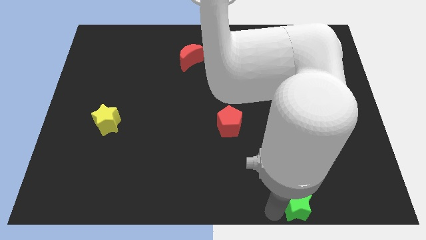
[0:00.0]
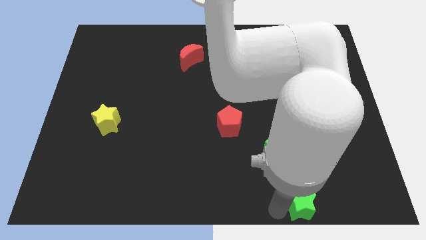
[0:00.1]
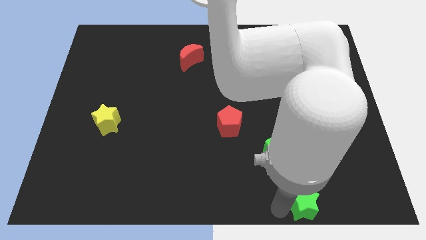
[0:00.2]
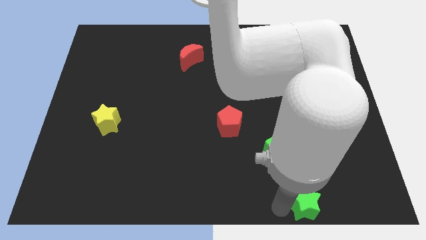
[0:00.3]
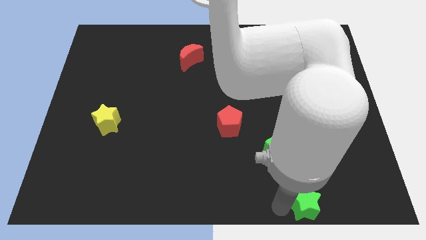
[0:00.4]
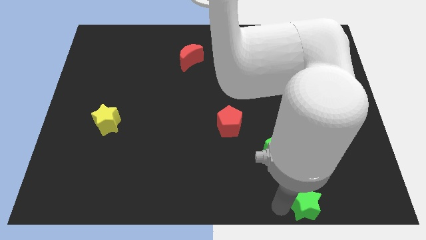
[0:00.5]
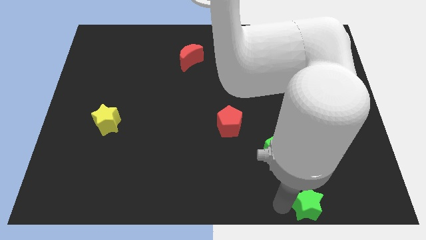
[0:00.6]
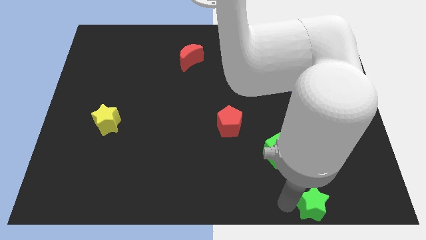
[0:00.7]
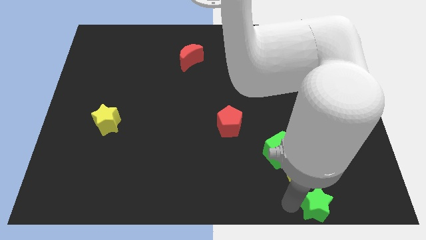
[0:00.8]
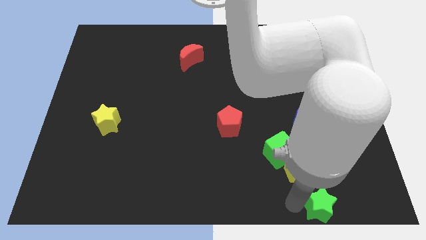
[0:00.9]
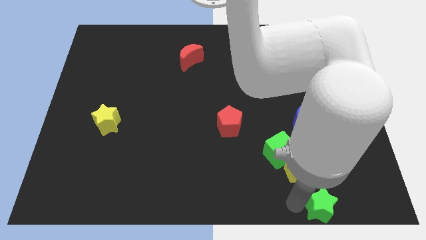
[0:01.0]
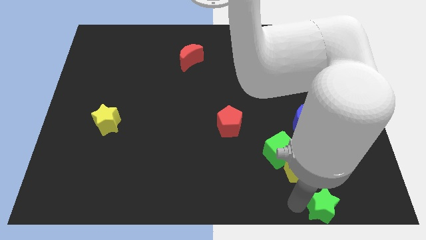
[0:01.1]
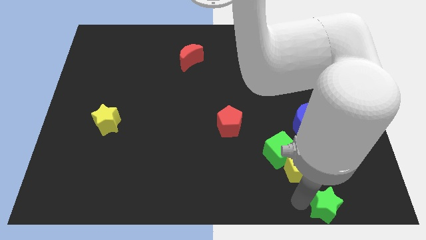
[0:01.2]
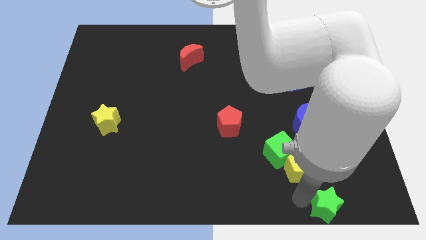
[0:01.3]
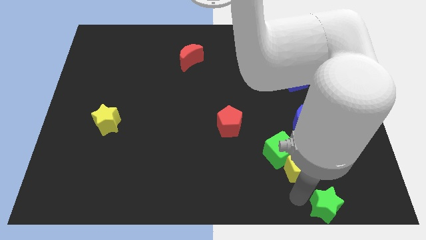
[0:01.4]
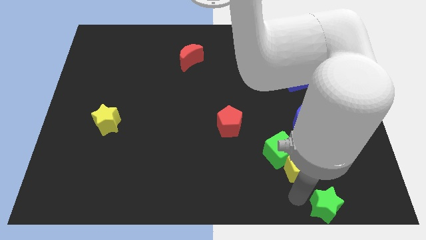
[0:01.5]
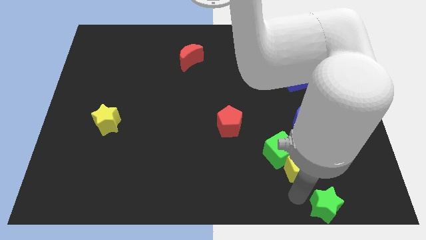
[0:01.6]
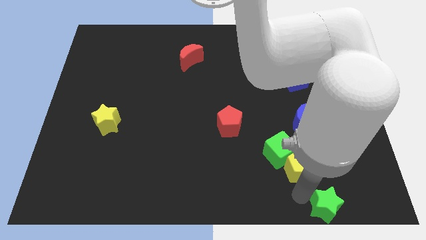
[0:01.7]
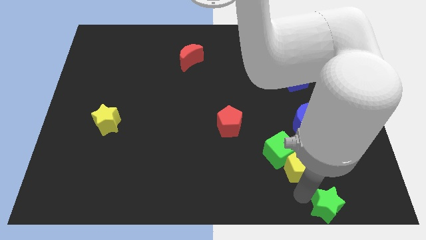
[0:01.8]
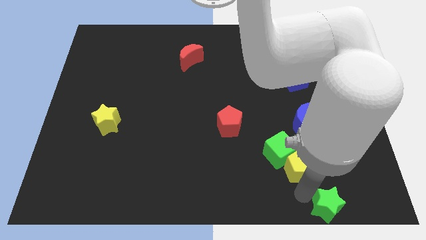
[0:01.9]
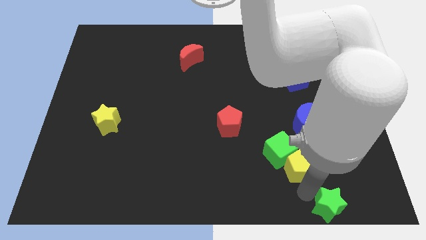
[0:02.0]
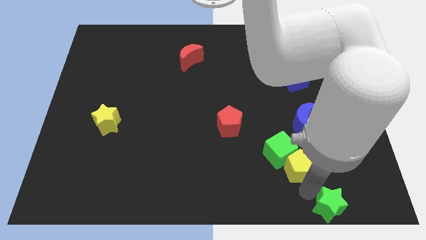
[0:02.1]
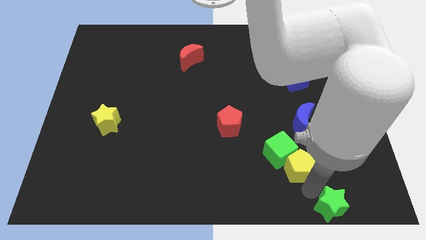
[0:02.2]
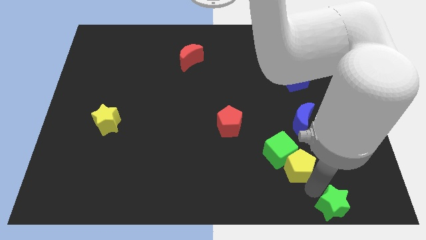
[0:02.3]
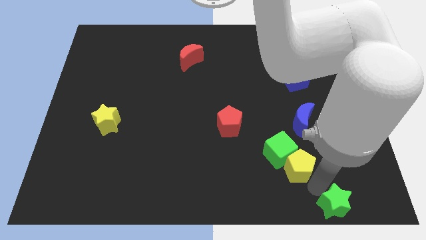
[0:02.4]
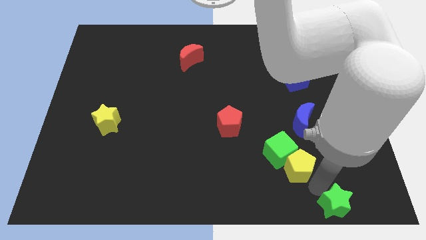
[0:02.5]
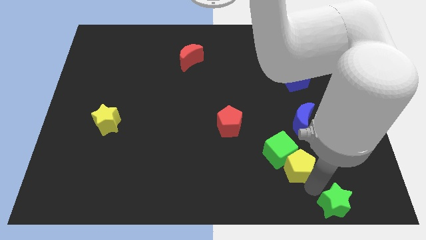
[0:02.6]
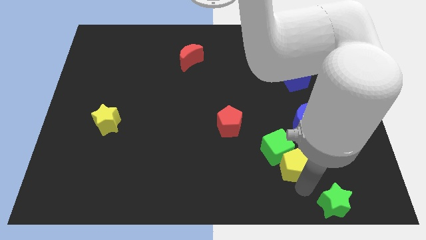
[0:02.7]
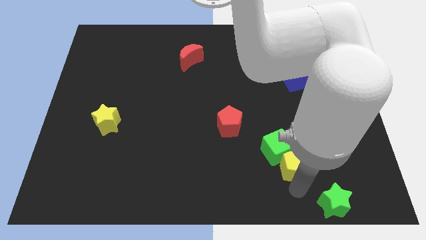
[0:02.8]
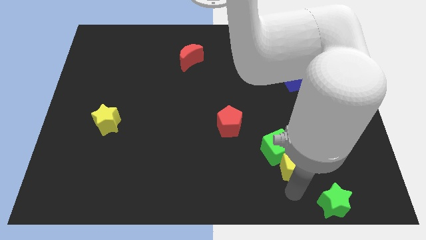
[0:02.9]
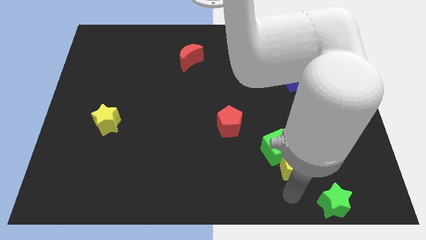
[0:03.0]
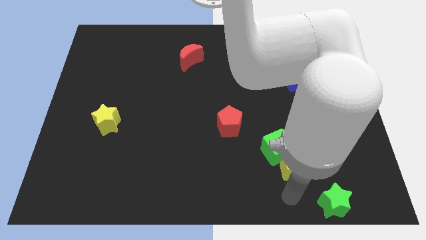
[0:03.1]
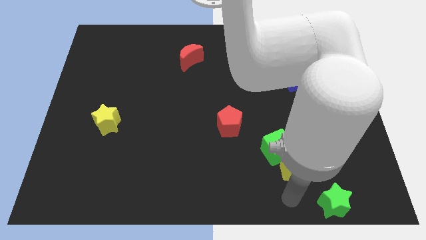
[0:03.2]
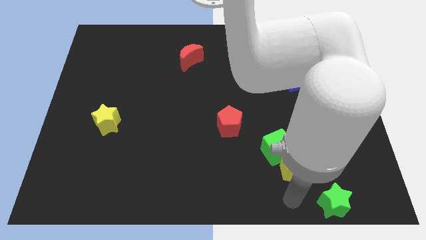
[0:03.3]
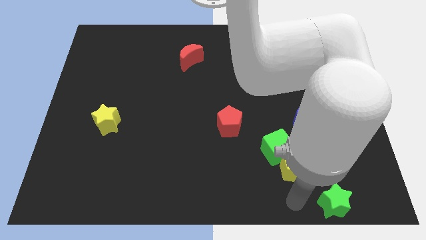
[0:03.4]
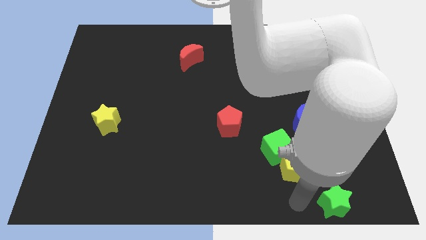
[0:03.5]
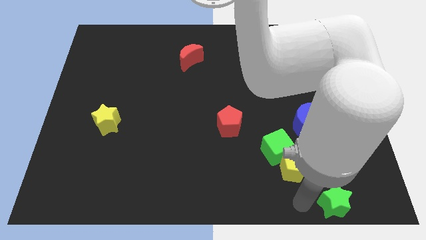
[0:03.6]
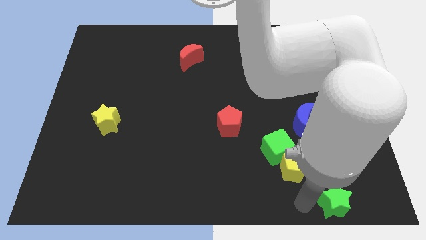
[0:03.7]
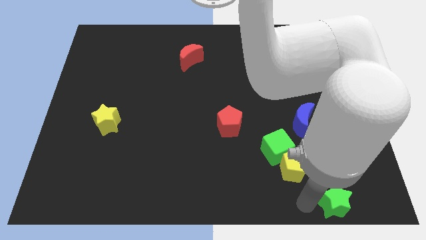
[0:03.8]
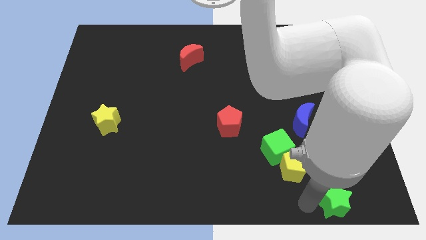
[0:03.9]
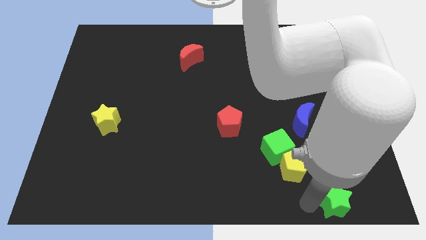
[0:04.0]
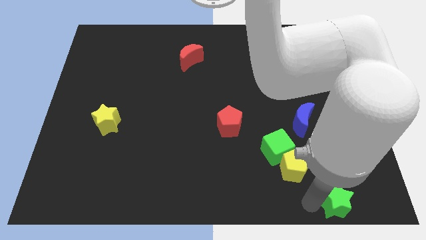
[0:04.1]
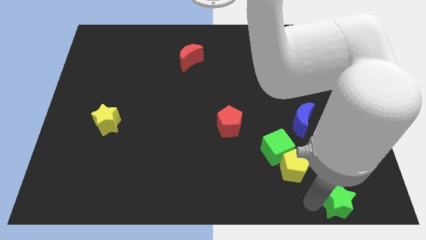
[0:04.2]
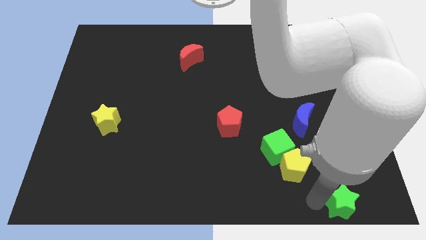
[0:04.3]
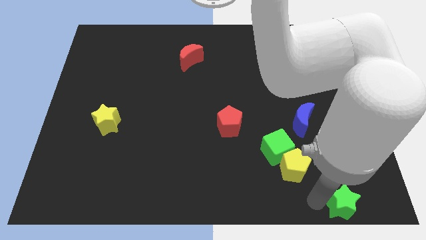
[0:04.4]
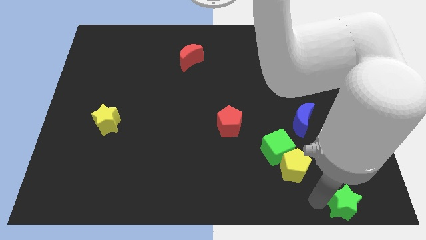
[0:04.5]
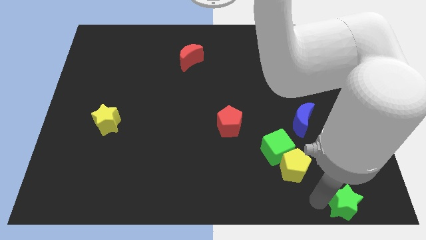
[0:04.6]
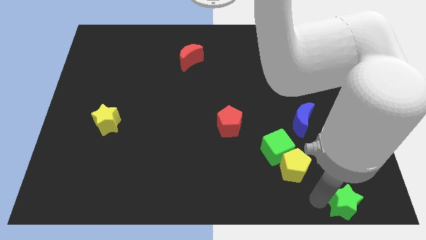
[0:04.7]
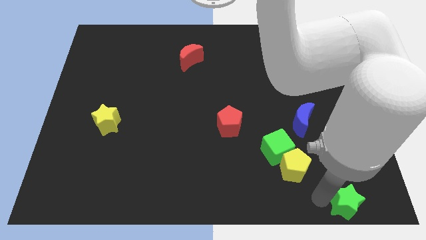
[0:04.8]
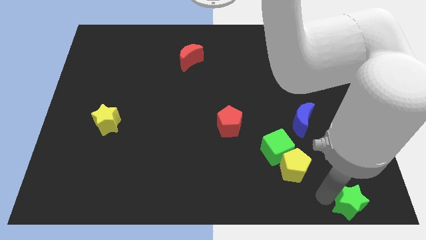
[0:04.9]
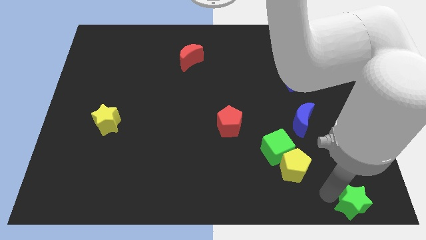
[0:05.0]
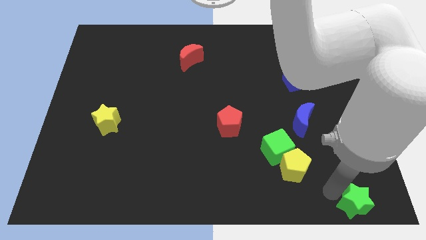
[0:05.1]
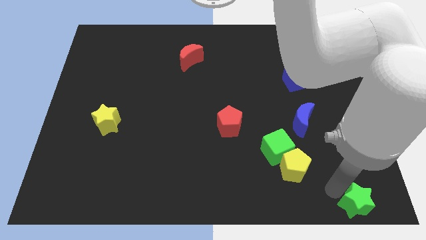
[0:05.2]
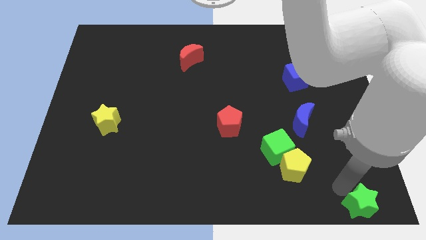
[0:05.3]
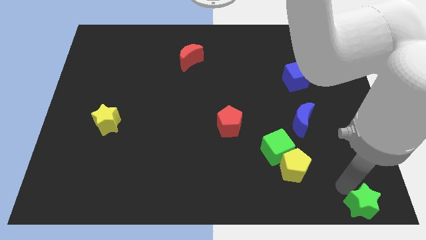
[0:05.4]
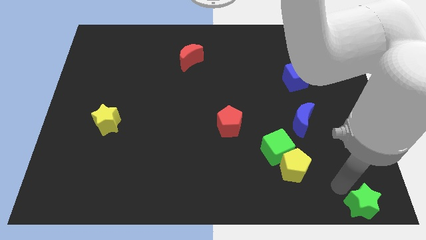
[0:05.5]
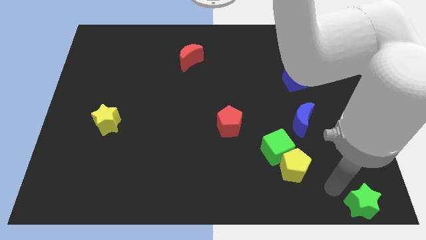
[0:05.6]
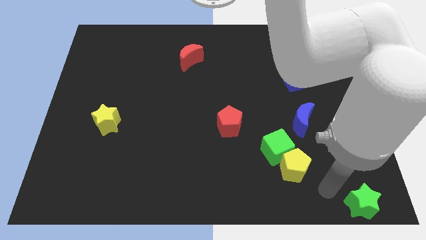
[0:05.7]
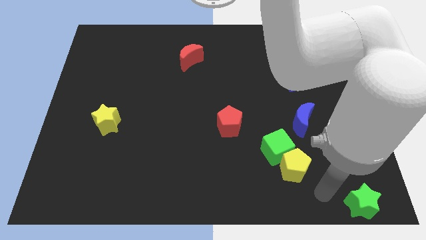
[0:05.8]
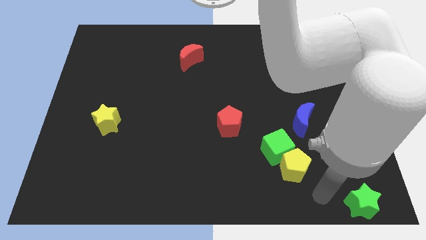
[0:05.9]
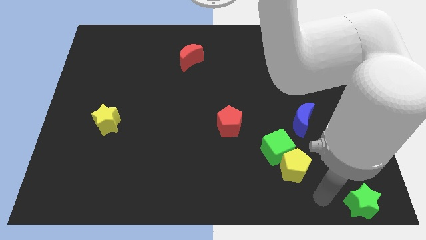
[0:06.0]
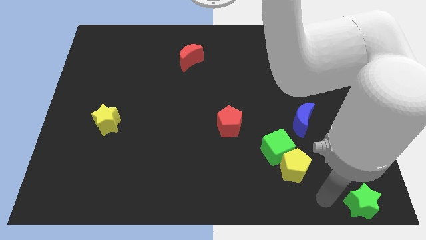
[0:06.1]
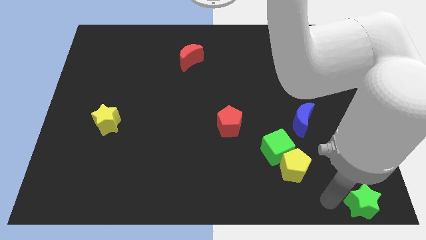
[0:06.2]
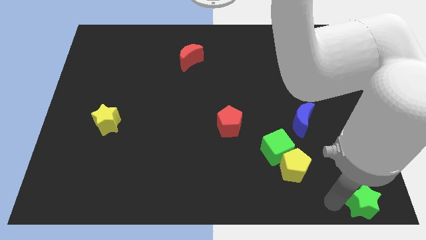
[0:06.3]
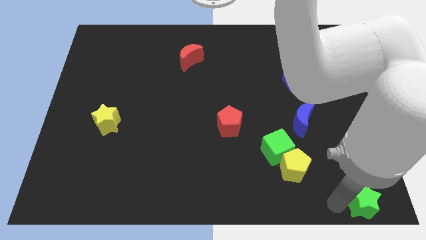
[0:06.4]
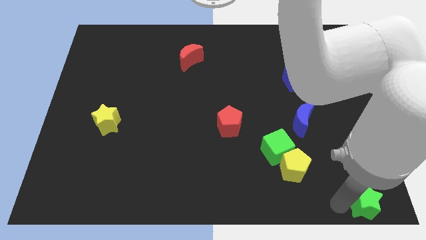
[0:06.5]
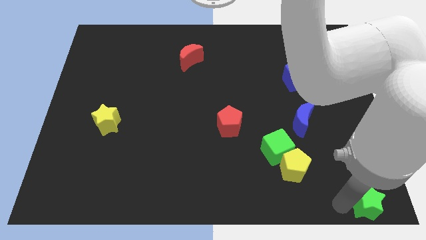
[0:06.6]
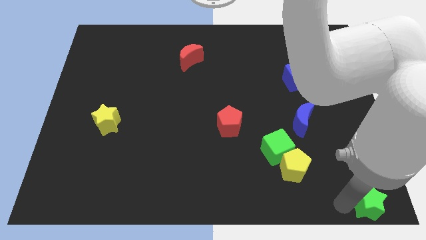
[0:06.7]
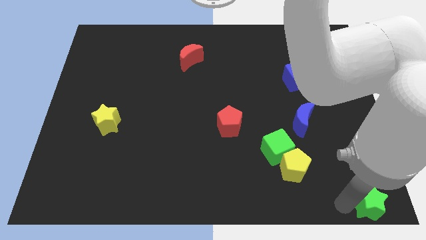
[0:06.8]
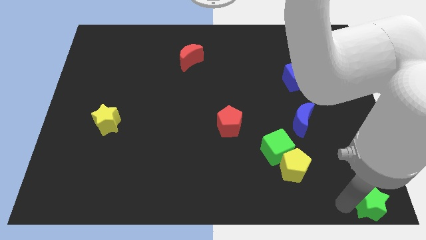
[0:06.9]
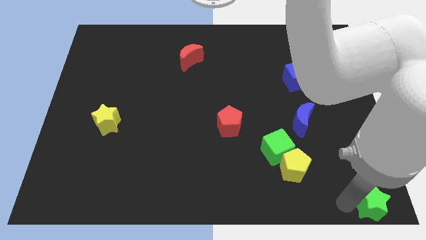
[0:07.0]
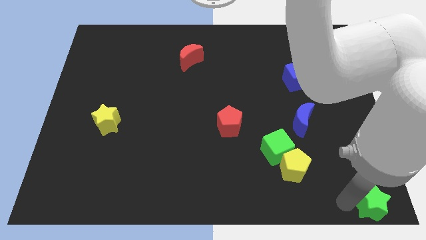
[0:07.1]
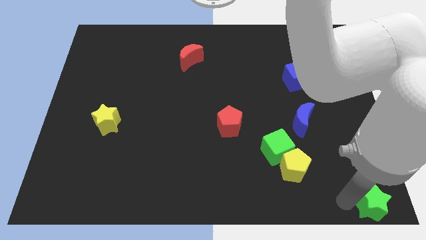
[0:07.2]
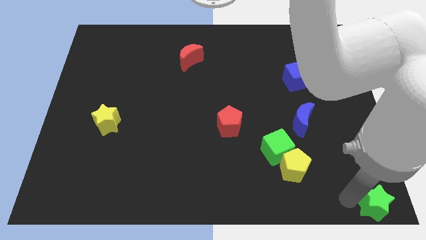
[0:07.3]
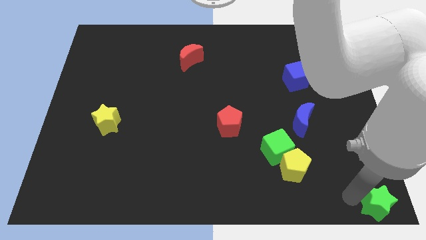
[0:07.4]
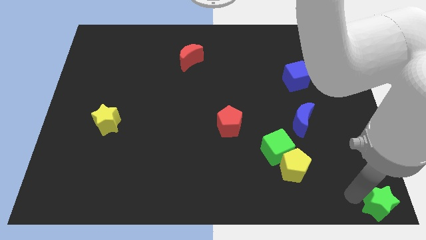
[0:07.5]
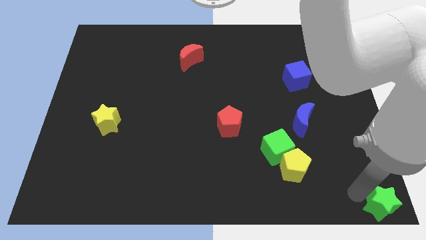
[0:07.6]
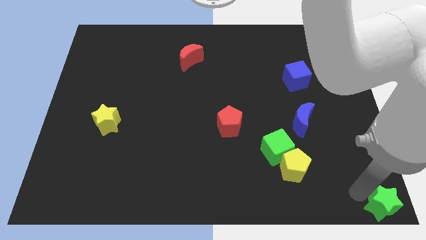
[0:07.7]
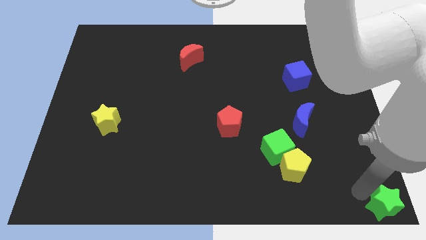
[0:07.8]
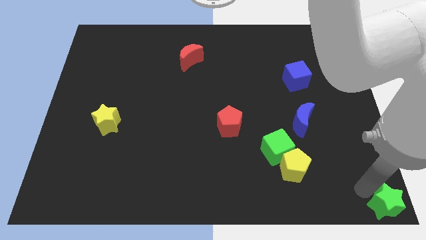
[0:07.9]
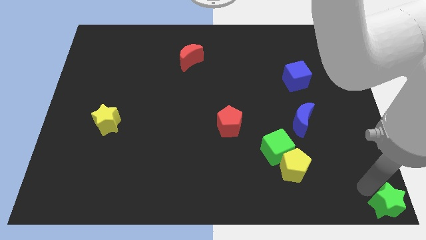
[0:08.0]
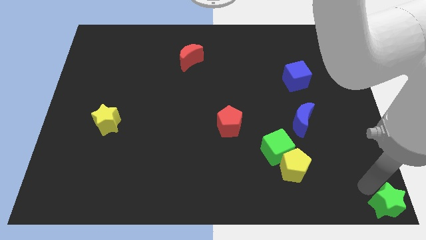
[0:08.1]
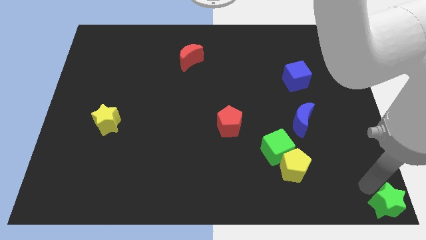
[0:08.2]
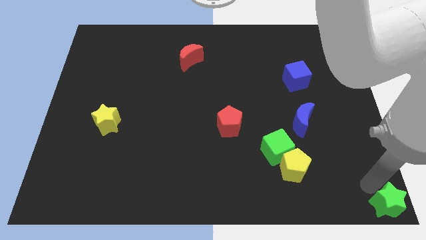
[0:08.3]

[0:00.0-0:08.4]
move the green star to the bottom right corner of the board

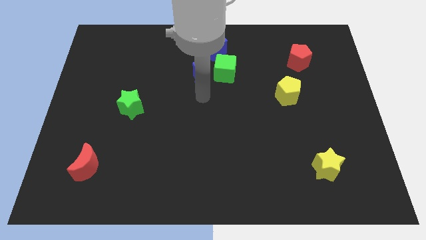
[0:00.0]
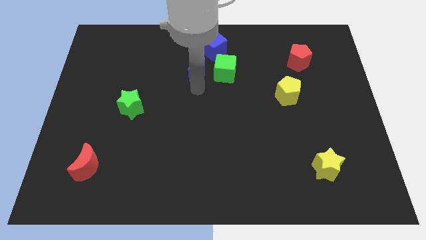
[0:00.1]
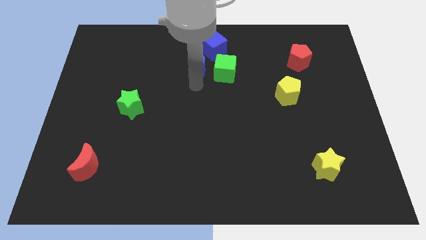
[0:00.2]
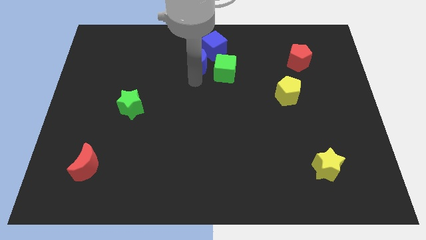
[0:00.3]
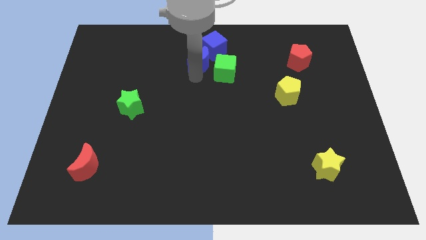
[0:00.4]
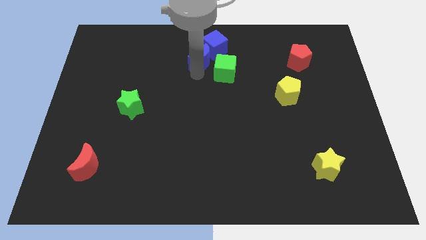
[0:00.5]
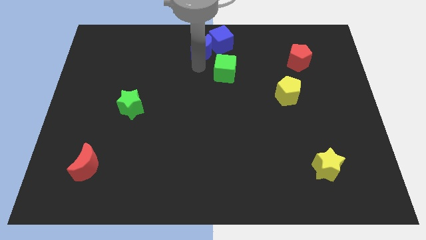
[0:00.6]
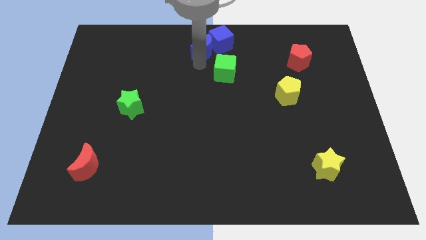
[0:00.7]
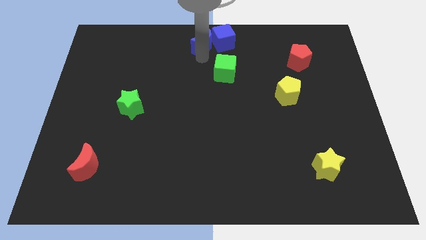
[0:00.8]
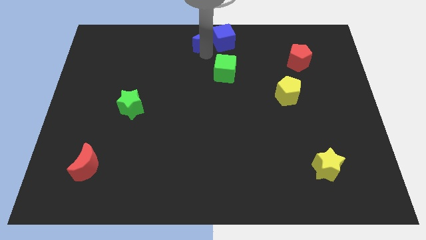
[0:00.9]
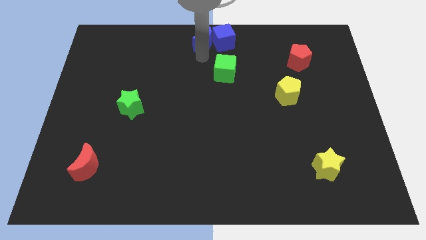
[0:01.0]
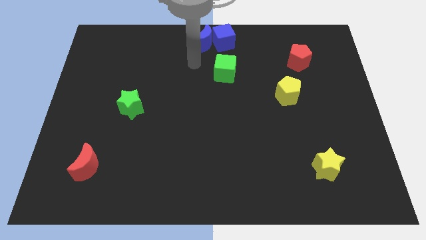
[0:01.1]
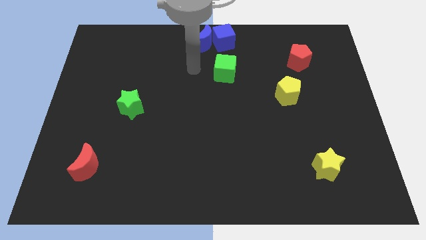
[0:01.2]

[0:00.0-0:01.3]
drag the blue moon slightly upwards
